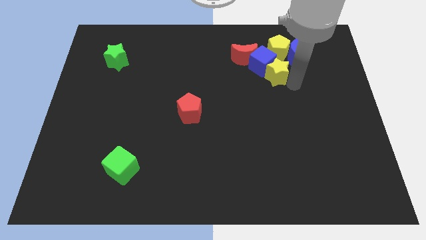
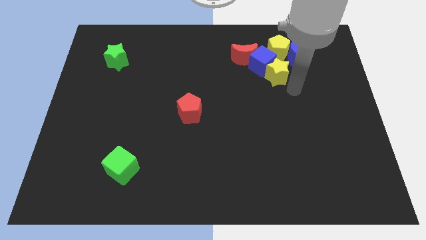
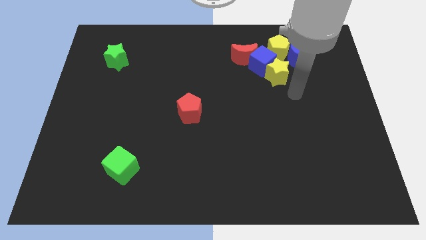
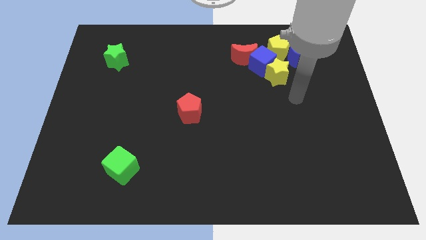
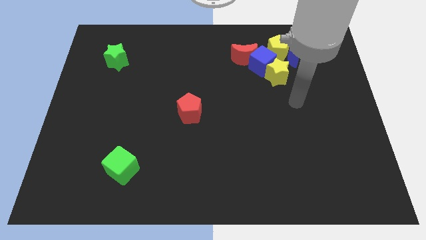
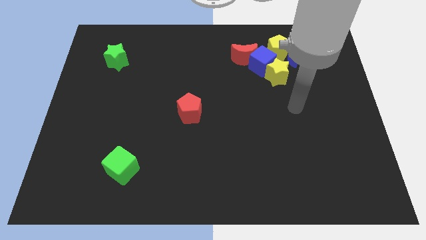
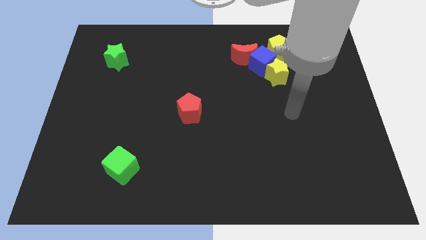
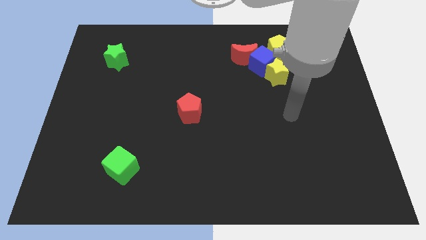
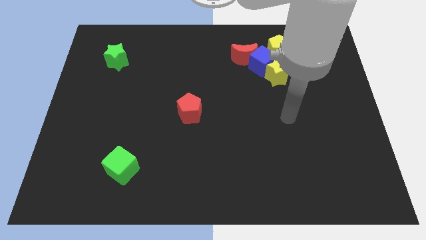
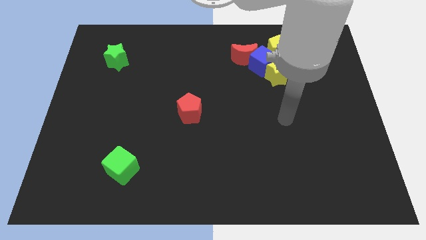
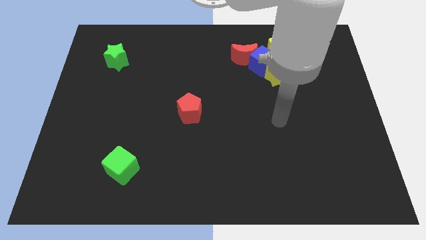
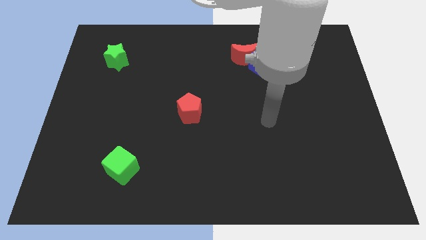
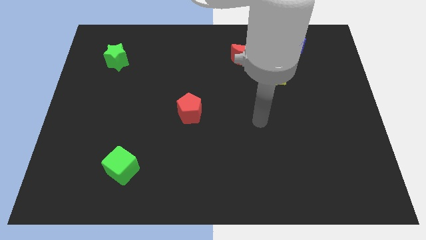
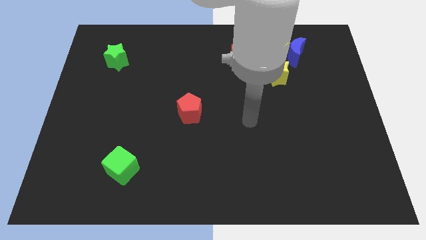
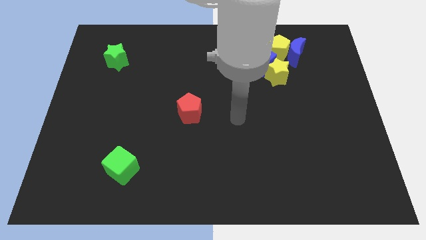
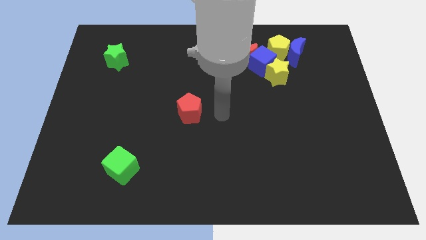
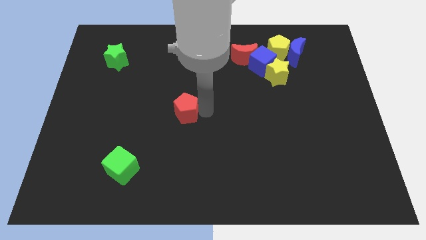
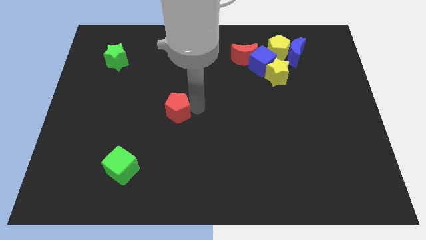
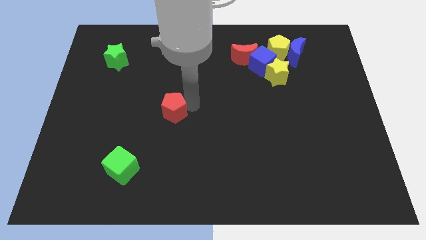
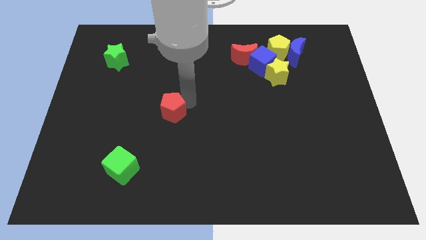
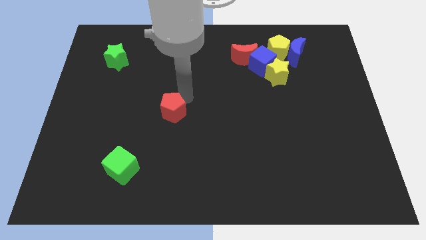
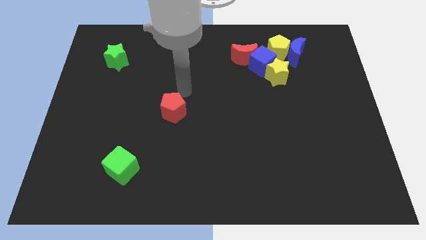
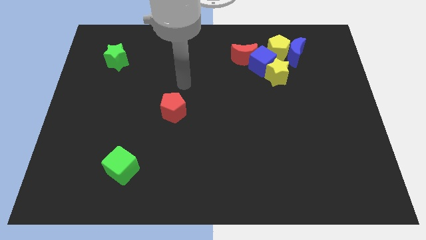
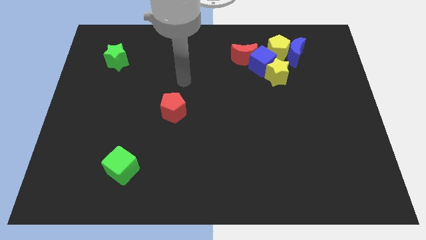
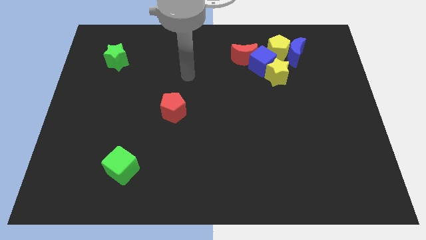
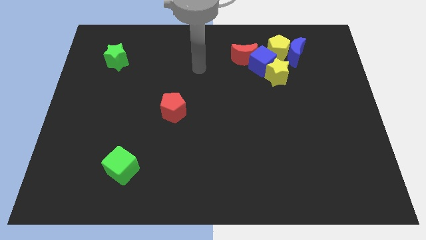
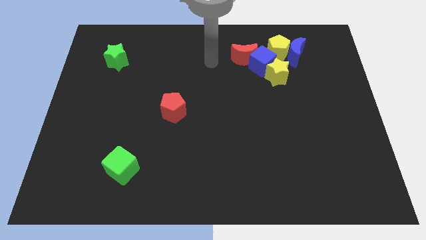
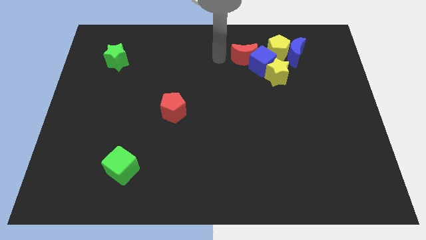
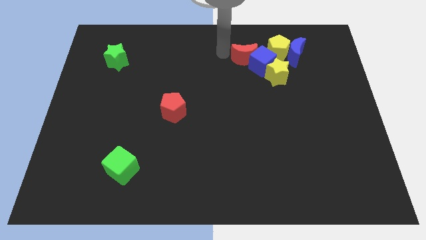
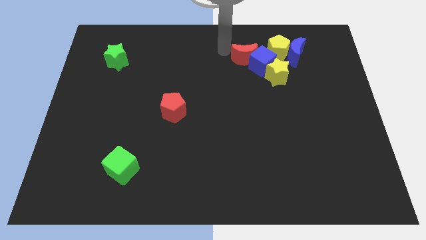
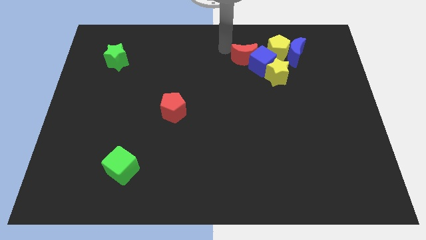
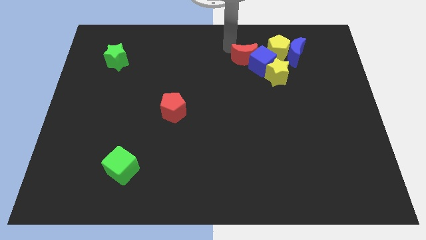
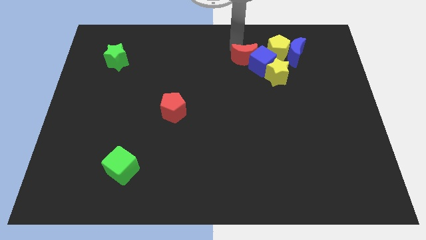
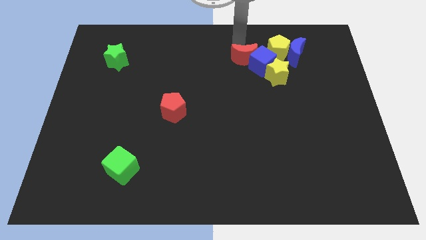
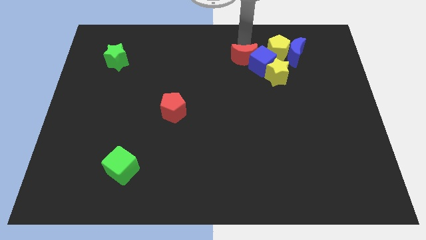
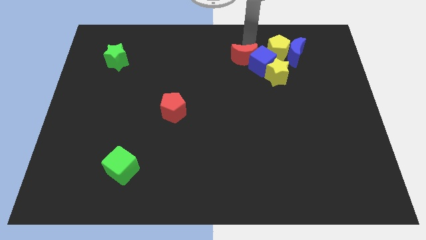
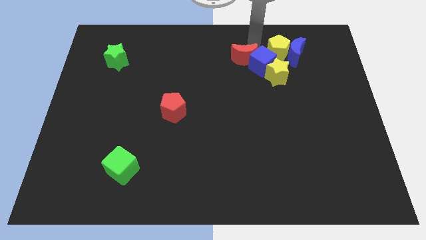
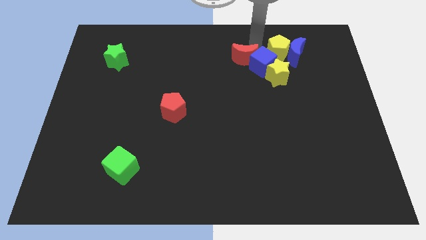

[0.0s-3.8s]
point your arm at the top of the red moon

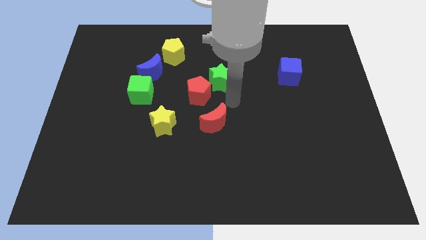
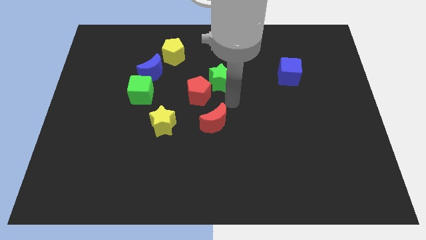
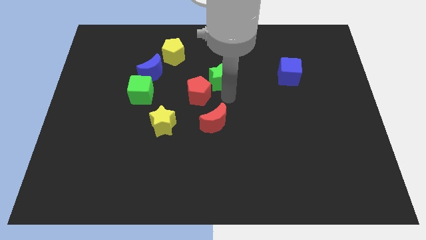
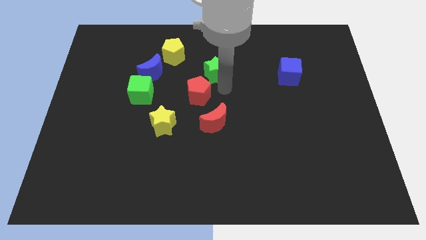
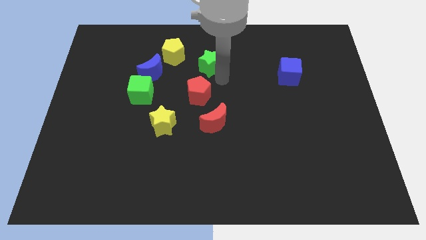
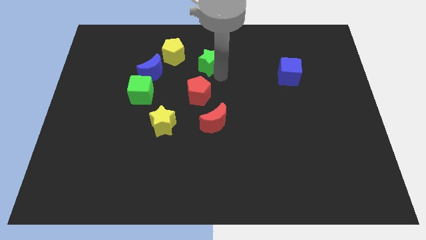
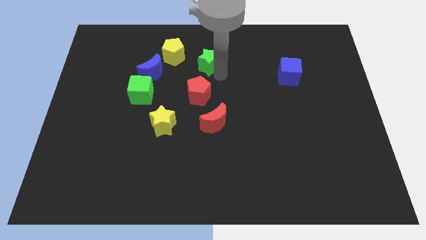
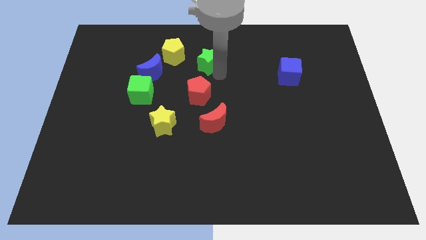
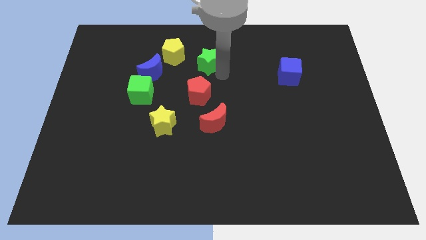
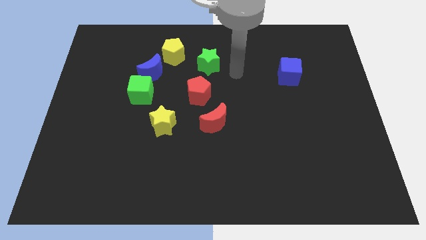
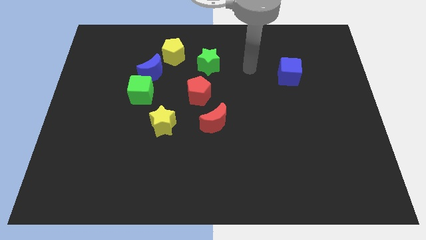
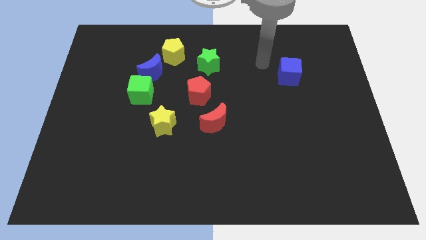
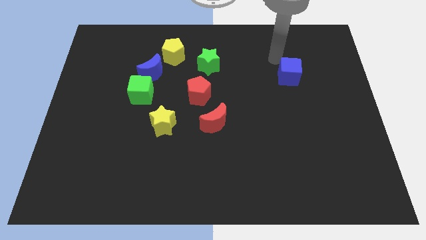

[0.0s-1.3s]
move the green star above the red pentagon

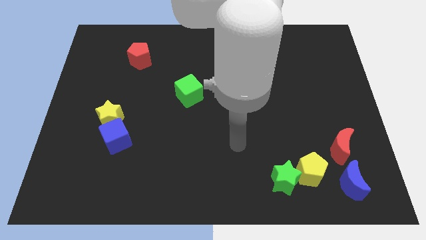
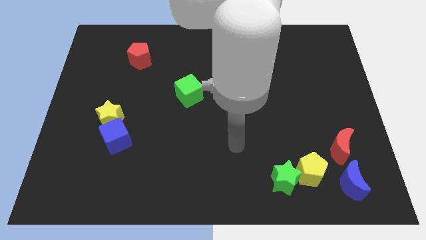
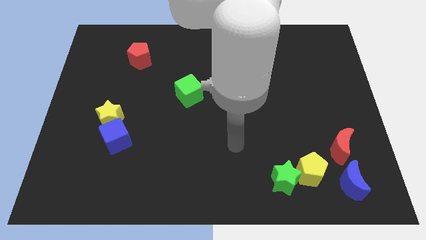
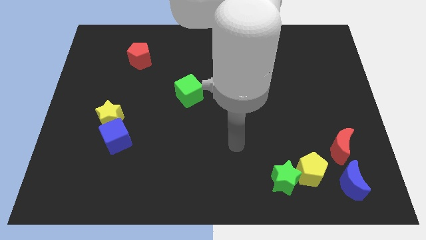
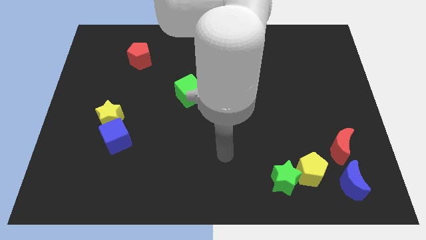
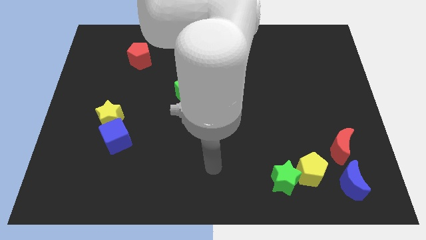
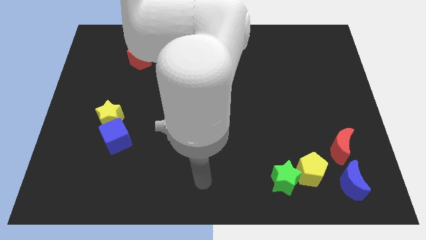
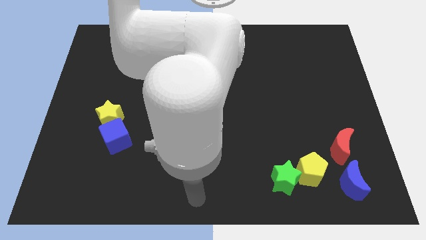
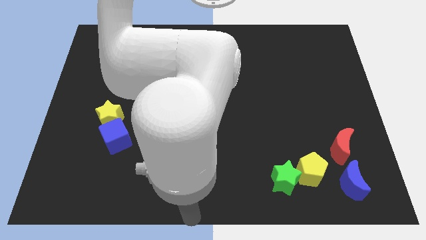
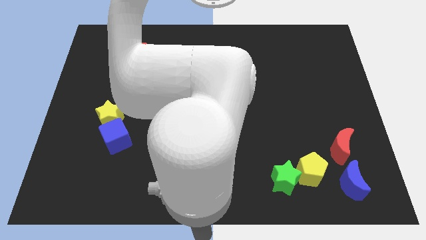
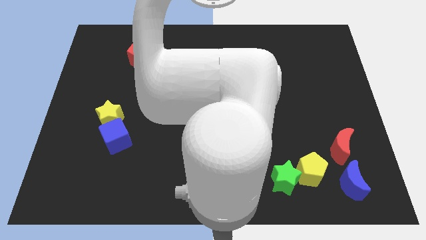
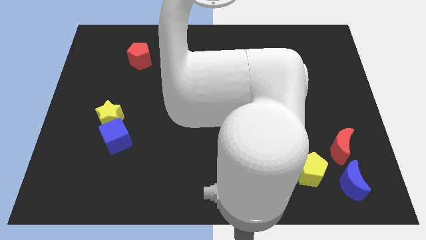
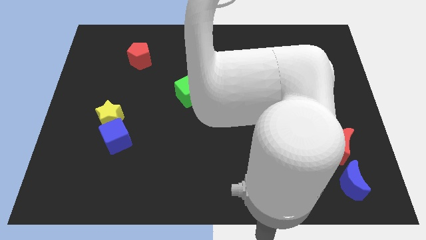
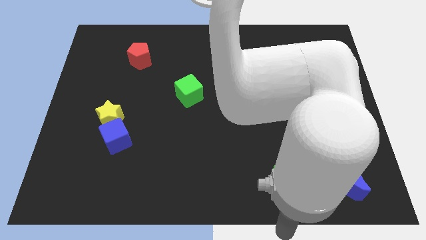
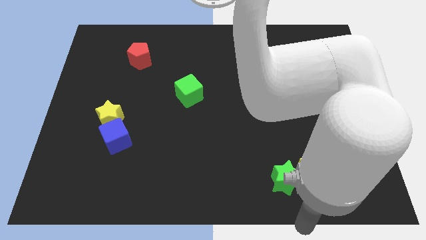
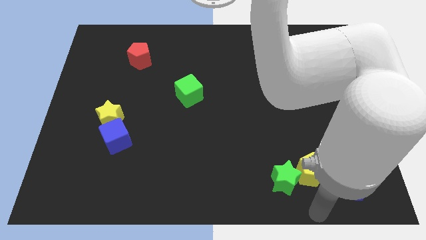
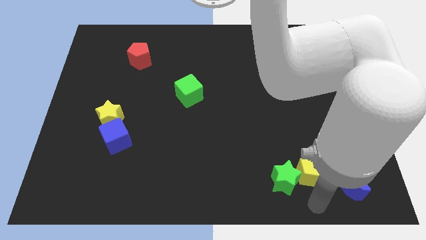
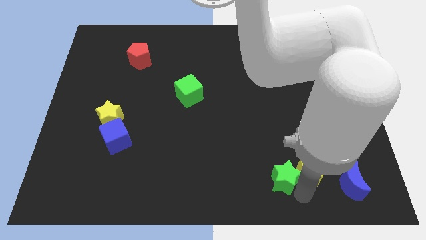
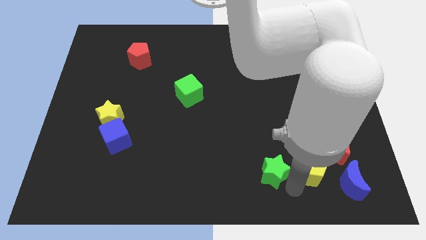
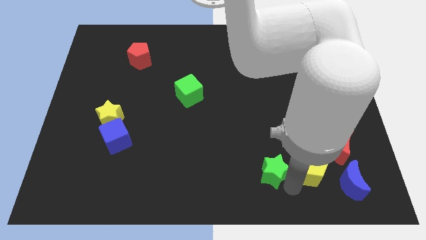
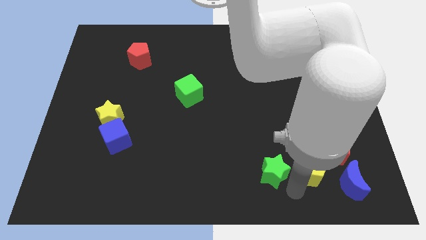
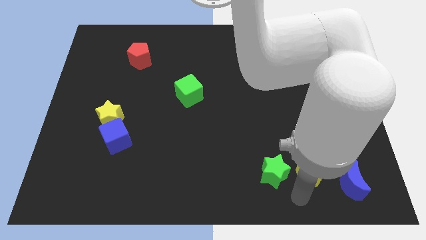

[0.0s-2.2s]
move the green star up slightly

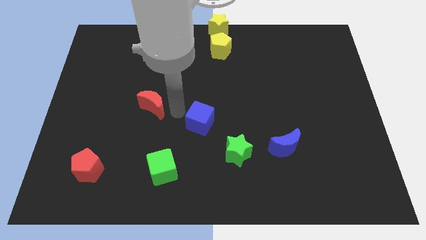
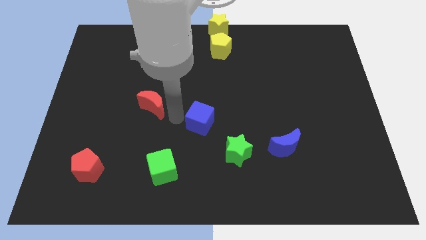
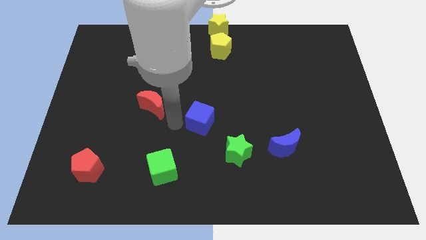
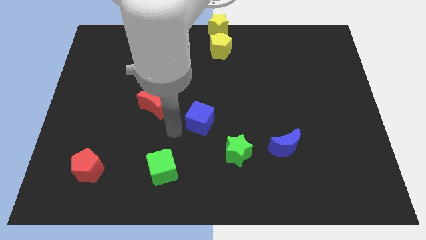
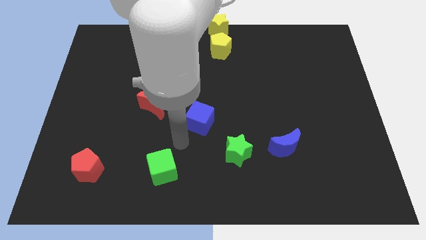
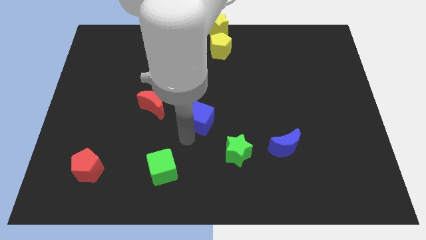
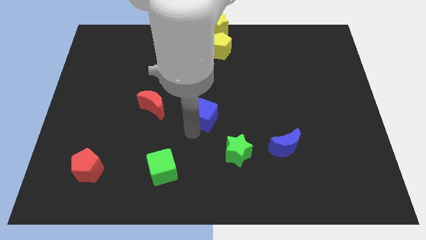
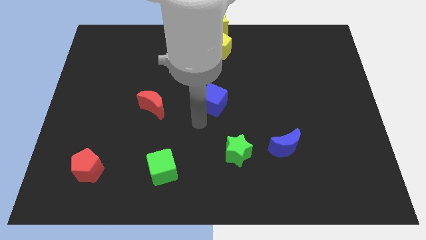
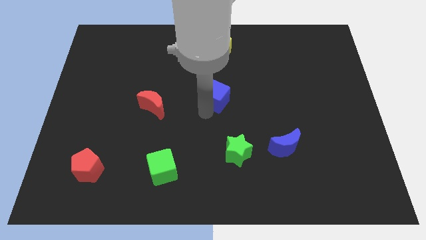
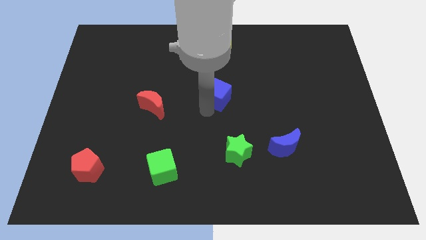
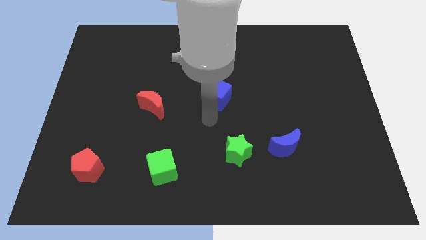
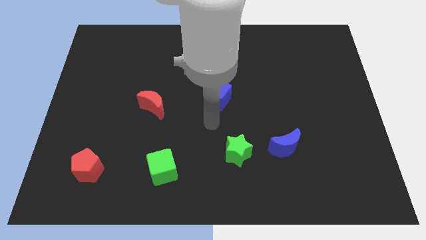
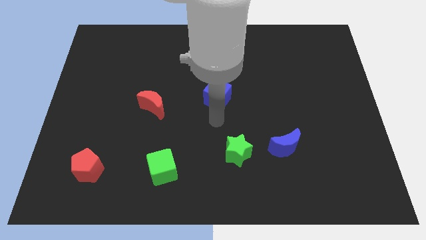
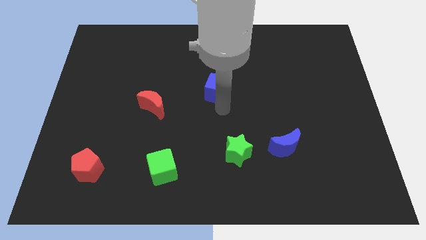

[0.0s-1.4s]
place the blue moon diagonally top right to the red moon
